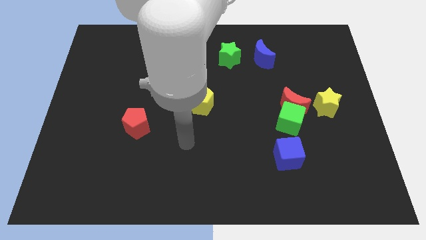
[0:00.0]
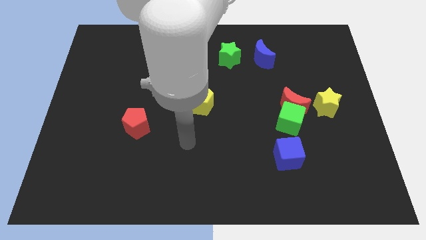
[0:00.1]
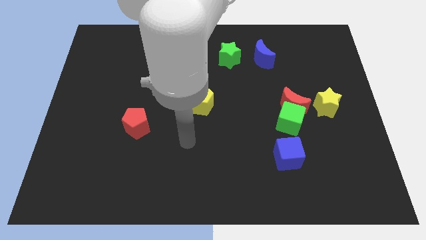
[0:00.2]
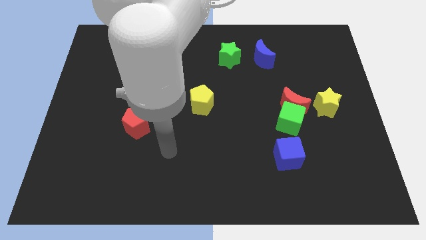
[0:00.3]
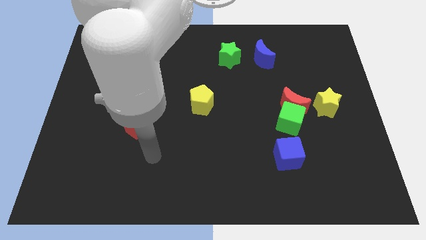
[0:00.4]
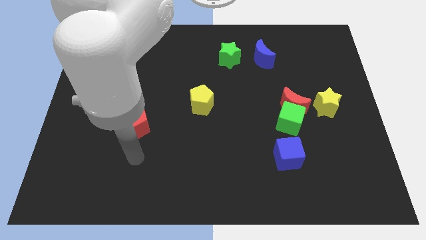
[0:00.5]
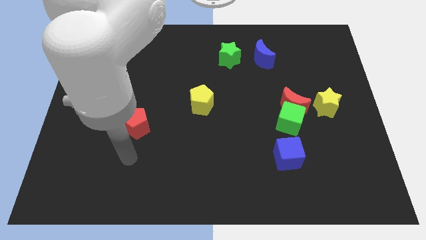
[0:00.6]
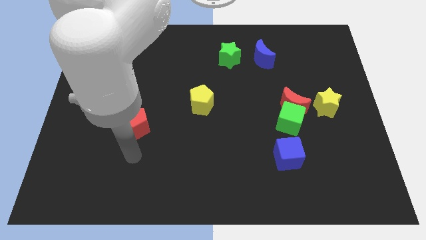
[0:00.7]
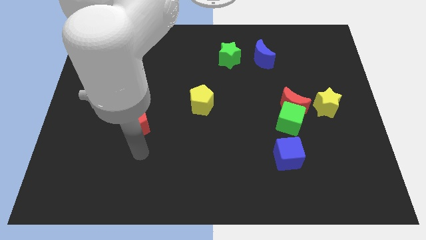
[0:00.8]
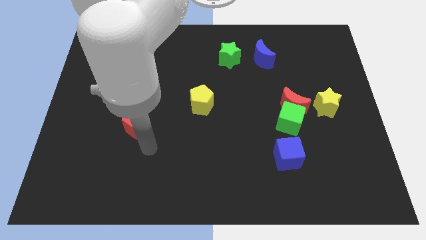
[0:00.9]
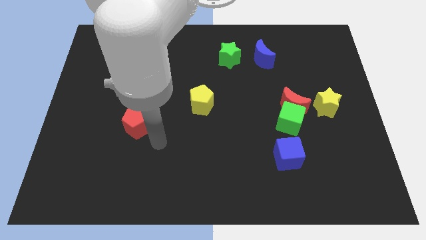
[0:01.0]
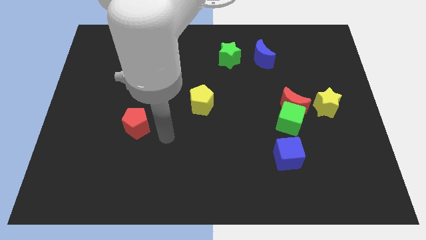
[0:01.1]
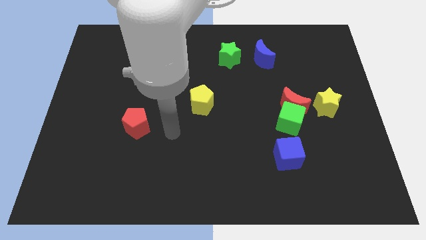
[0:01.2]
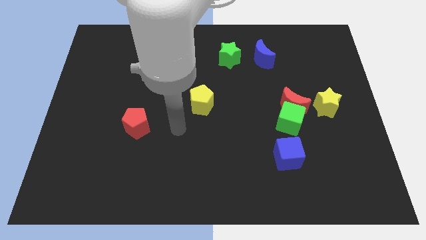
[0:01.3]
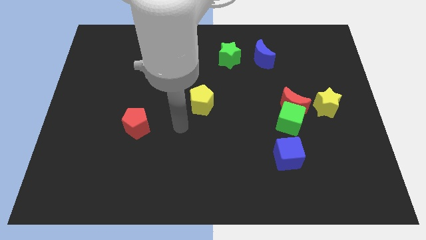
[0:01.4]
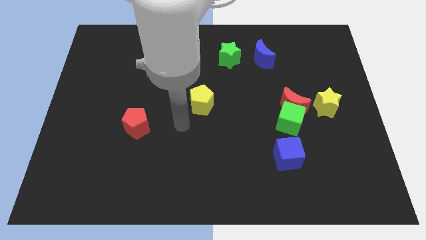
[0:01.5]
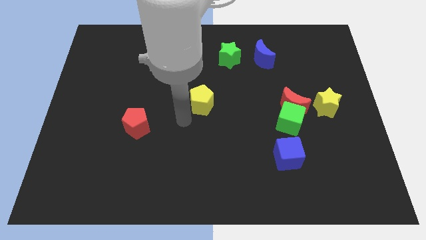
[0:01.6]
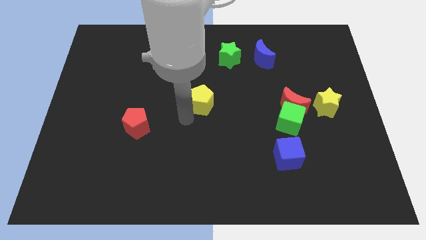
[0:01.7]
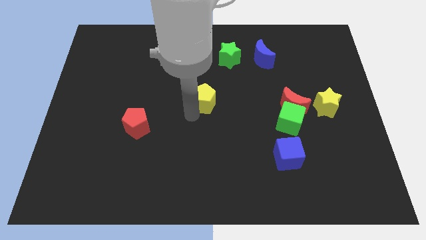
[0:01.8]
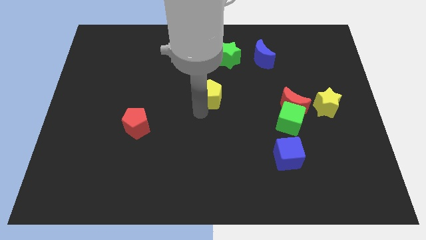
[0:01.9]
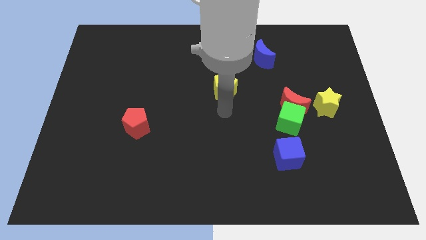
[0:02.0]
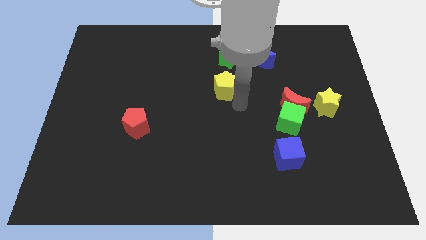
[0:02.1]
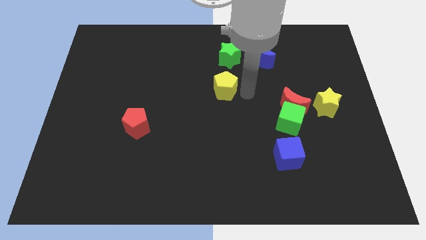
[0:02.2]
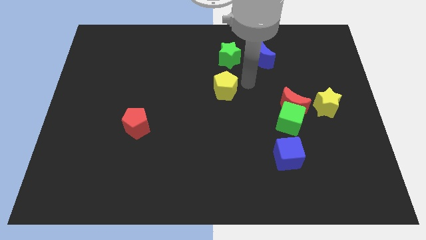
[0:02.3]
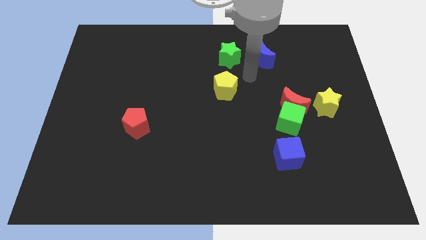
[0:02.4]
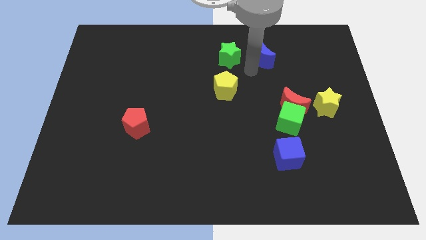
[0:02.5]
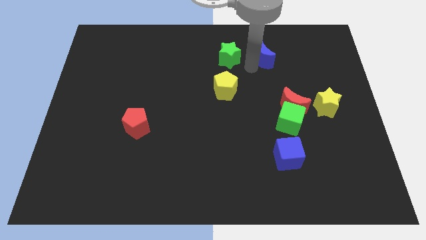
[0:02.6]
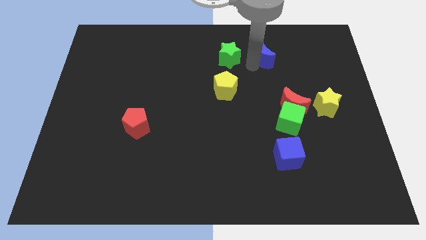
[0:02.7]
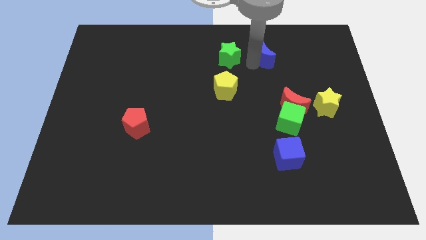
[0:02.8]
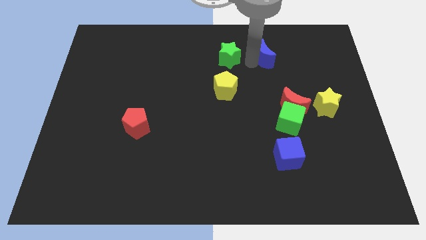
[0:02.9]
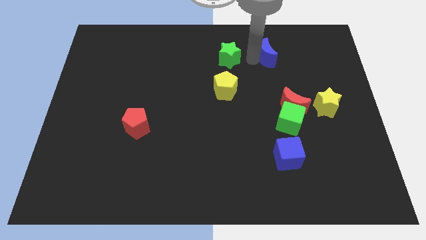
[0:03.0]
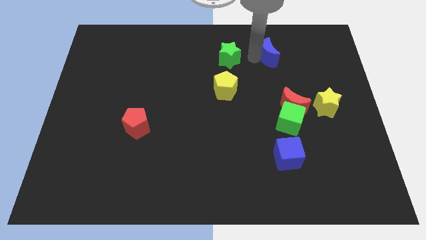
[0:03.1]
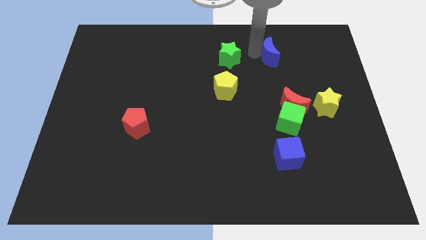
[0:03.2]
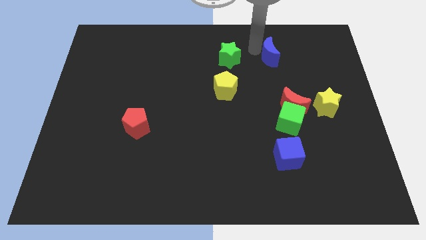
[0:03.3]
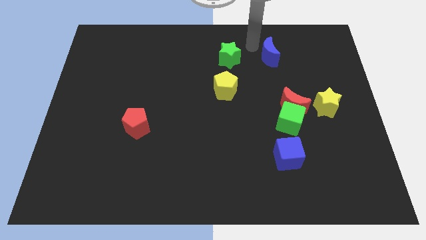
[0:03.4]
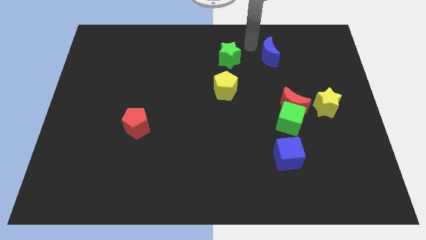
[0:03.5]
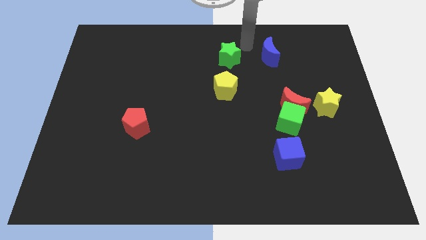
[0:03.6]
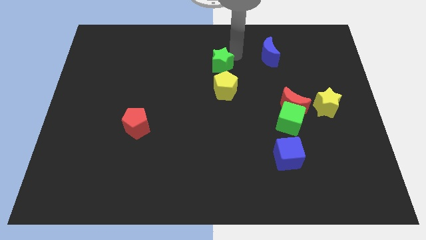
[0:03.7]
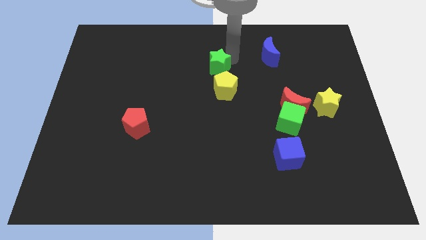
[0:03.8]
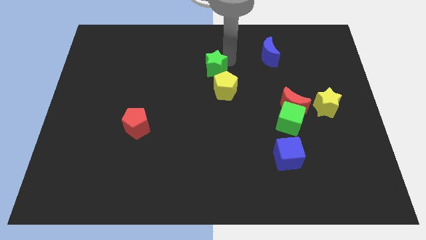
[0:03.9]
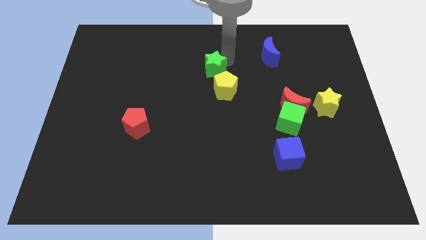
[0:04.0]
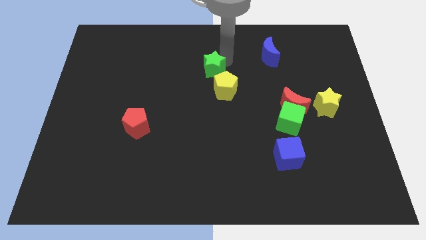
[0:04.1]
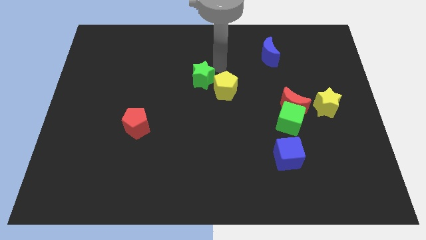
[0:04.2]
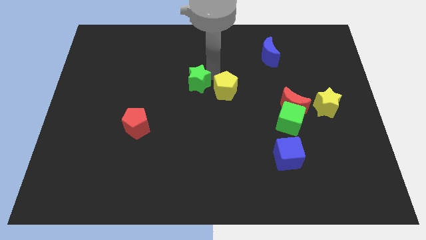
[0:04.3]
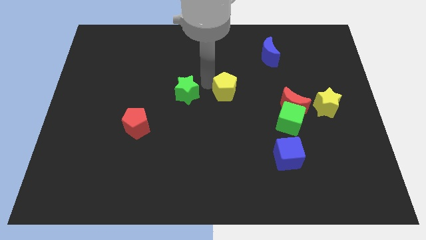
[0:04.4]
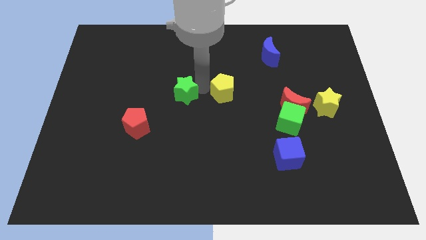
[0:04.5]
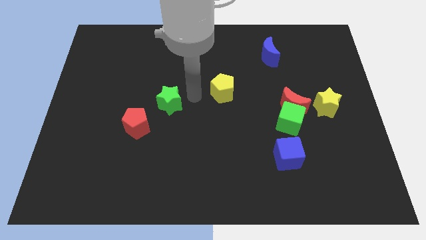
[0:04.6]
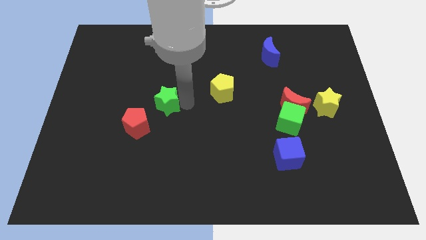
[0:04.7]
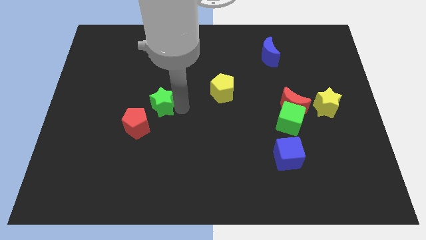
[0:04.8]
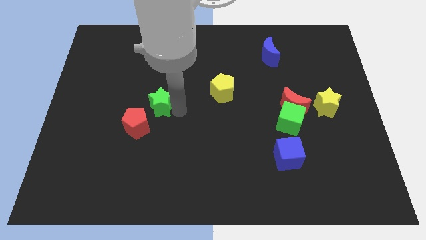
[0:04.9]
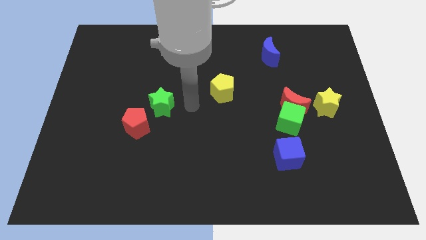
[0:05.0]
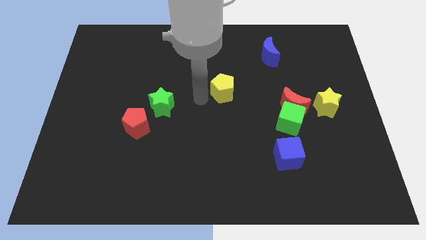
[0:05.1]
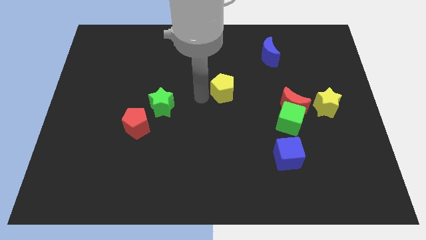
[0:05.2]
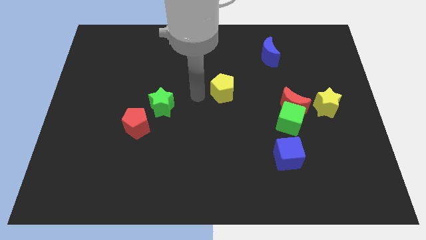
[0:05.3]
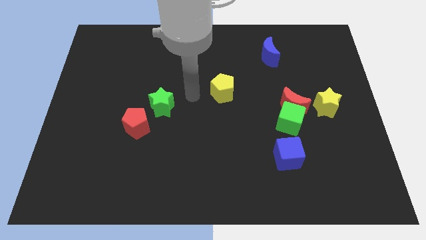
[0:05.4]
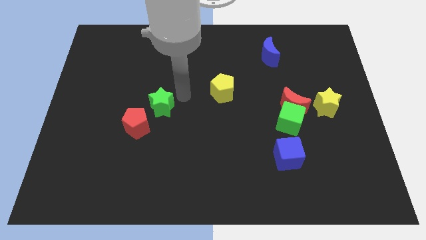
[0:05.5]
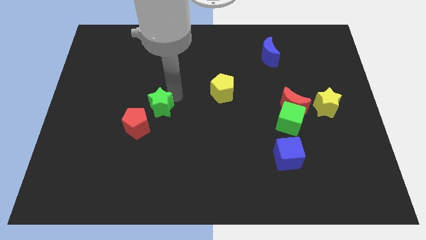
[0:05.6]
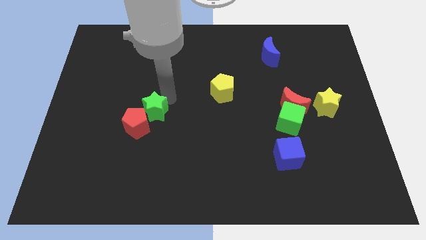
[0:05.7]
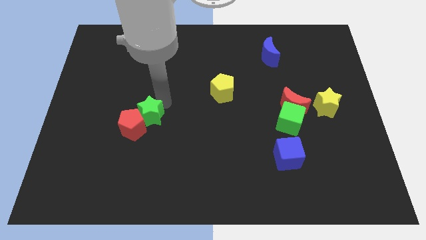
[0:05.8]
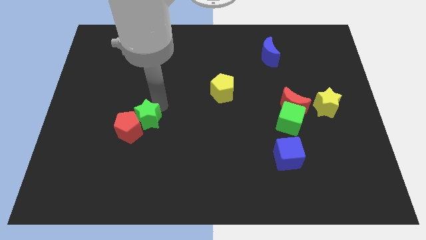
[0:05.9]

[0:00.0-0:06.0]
move the green star towards the red pentagon

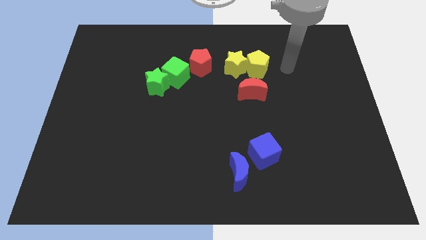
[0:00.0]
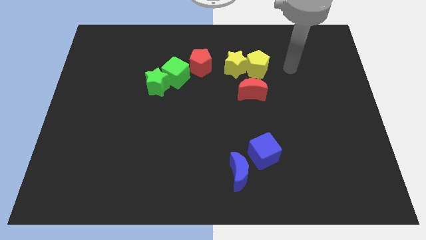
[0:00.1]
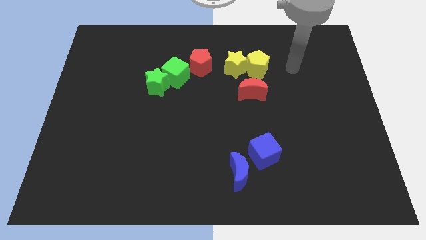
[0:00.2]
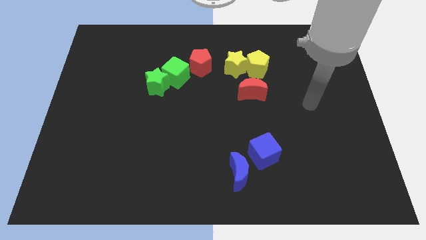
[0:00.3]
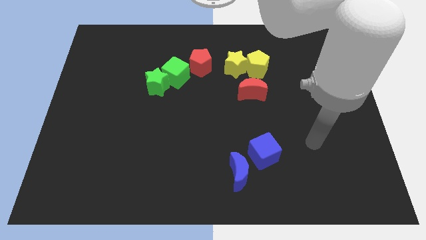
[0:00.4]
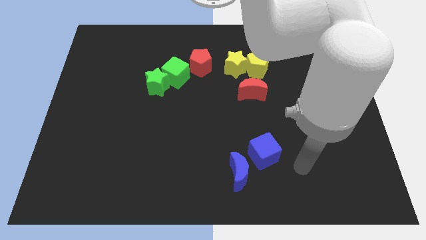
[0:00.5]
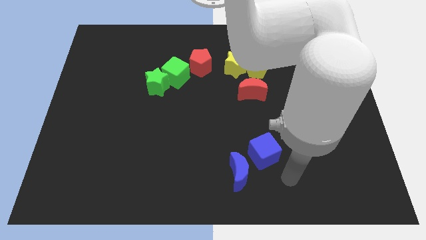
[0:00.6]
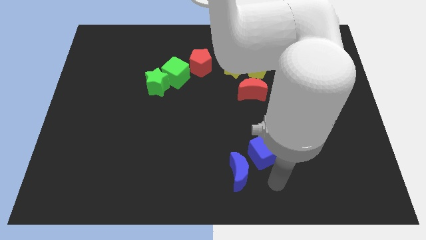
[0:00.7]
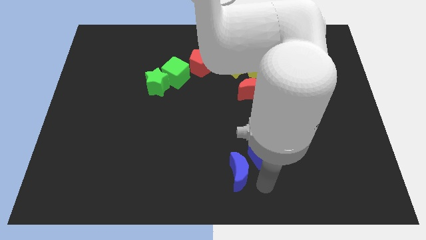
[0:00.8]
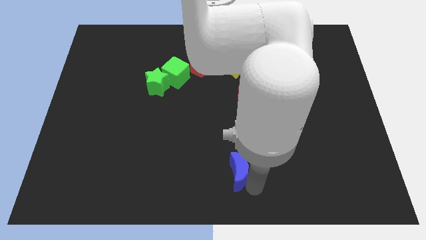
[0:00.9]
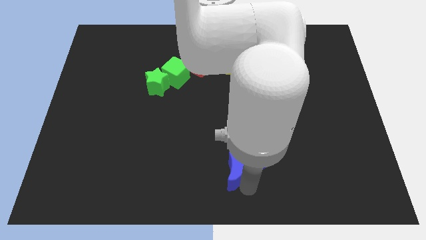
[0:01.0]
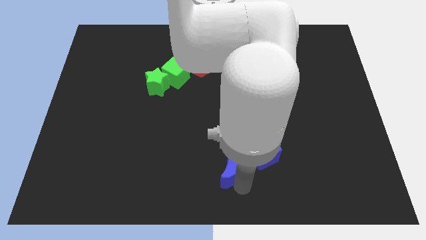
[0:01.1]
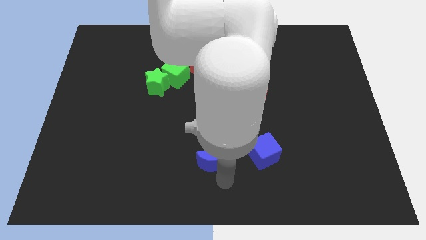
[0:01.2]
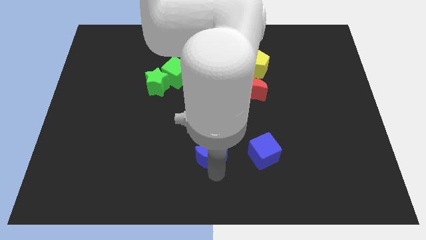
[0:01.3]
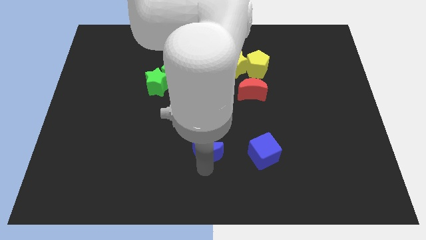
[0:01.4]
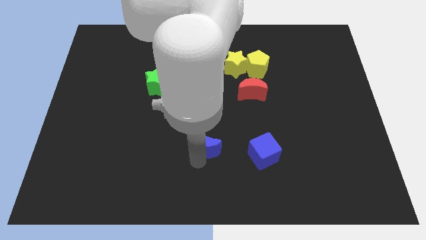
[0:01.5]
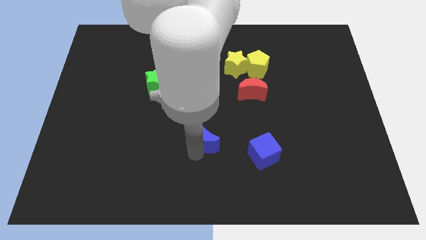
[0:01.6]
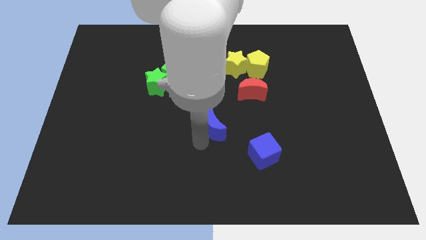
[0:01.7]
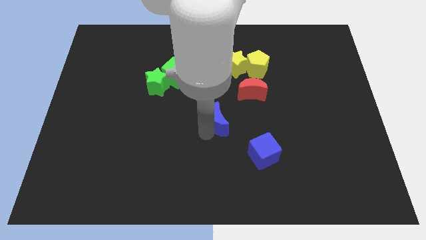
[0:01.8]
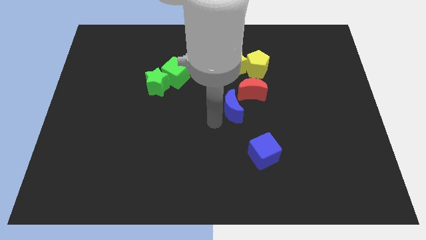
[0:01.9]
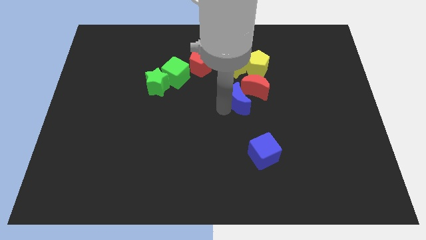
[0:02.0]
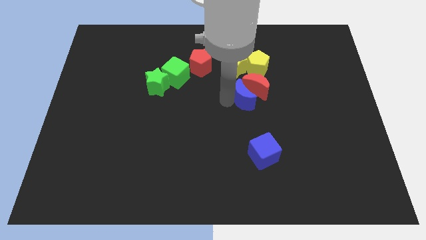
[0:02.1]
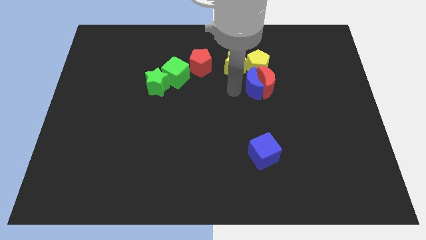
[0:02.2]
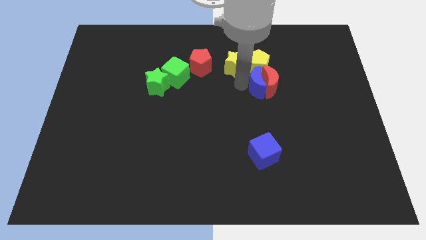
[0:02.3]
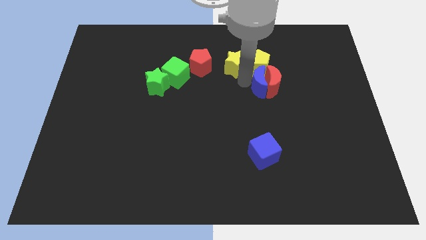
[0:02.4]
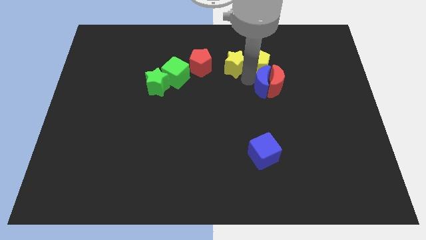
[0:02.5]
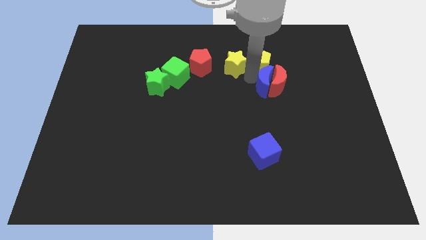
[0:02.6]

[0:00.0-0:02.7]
put the blue moon to the yellow pentagon
